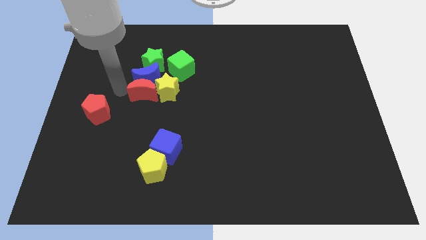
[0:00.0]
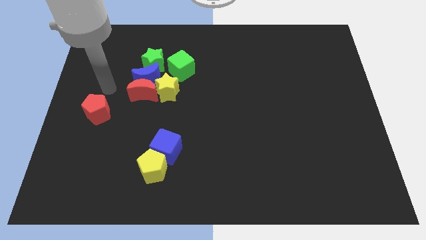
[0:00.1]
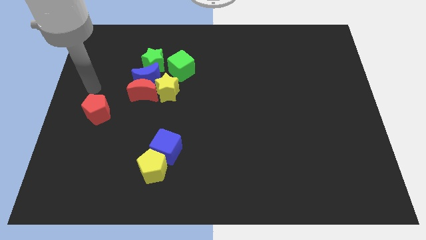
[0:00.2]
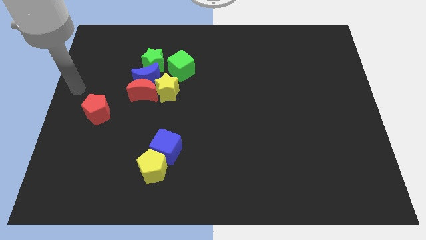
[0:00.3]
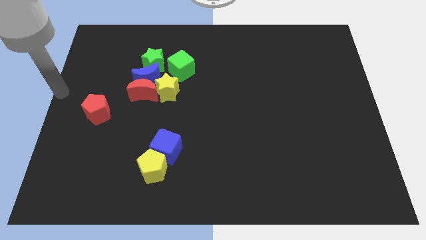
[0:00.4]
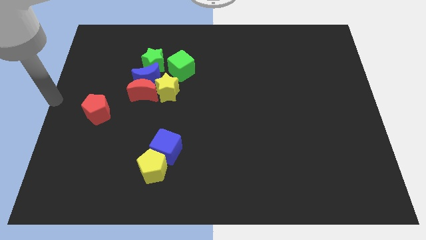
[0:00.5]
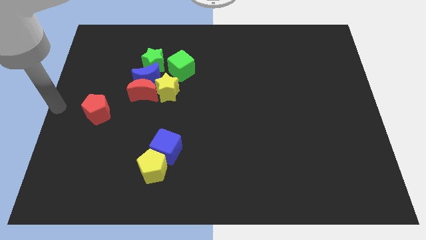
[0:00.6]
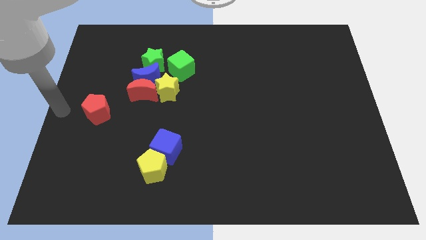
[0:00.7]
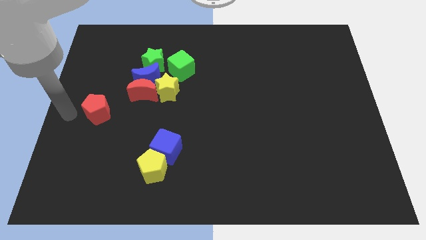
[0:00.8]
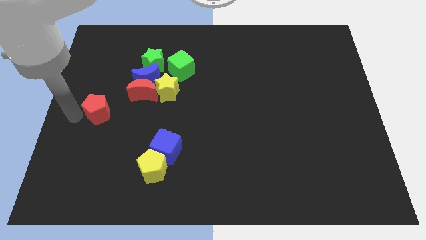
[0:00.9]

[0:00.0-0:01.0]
move the arm away from the red moon

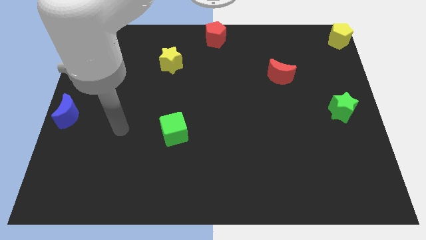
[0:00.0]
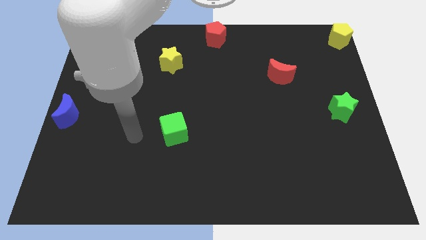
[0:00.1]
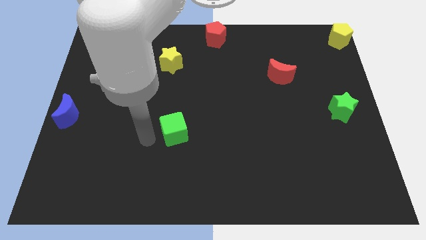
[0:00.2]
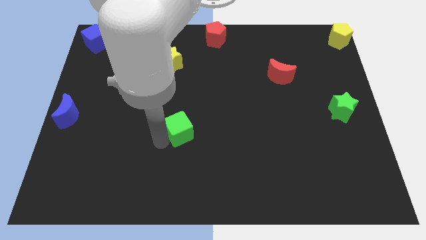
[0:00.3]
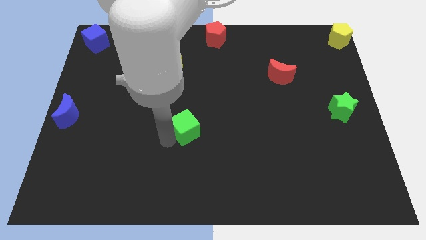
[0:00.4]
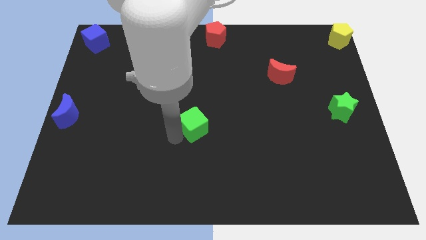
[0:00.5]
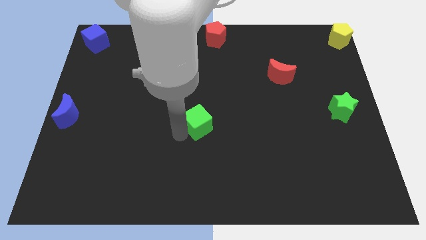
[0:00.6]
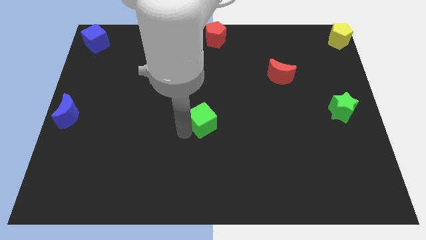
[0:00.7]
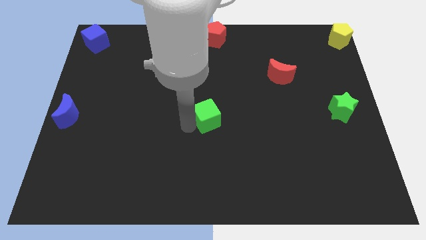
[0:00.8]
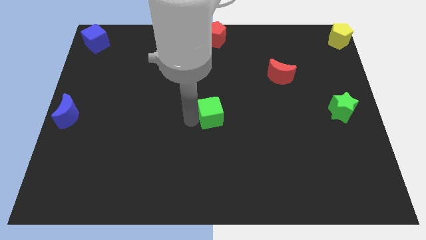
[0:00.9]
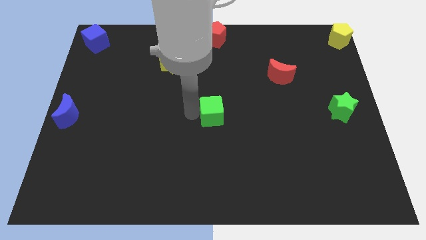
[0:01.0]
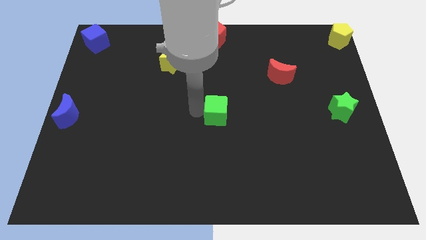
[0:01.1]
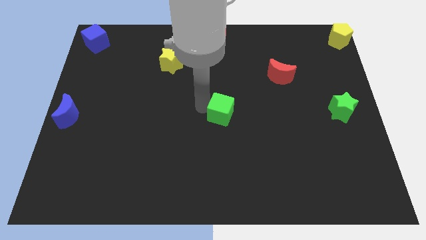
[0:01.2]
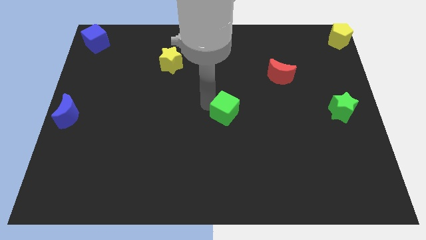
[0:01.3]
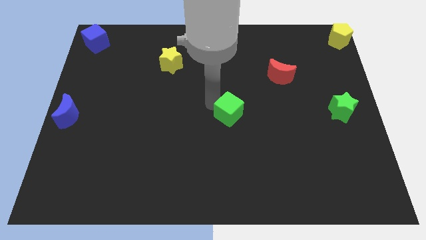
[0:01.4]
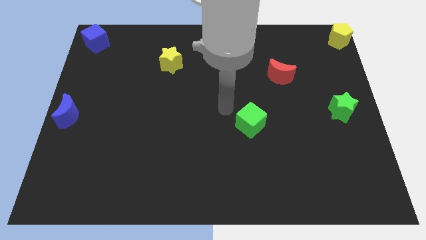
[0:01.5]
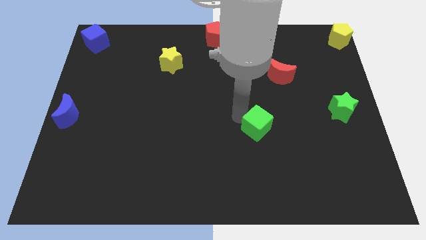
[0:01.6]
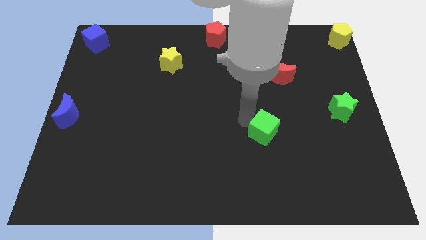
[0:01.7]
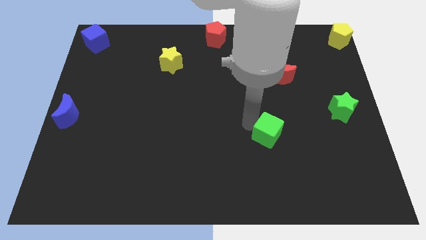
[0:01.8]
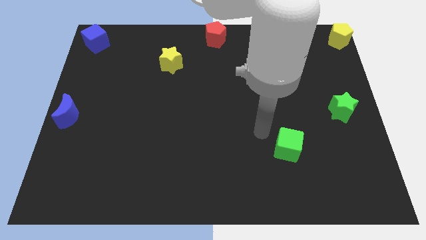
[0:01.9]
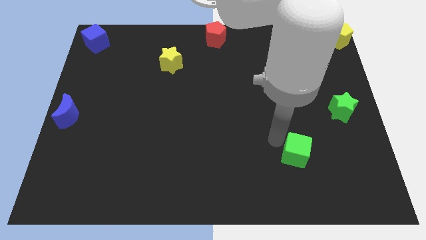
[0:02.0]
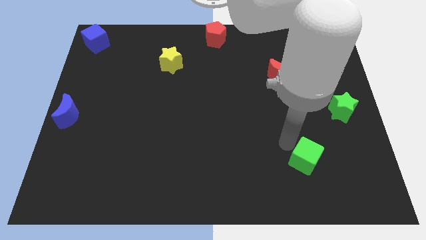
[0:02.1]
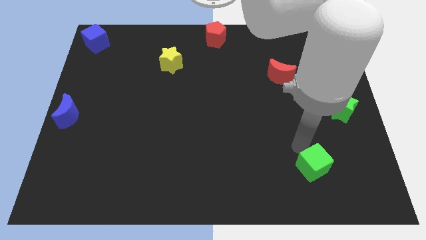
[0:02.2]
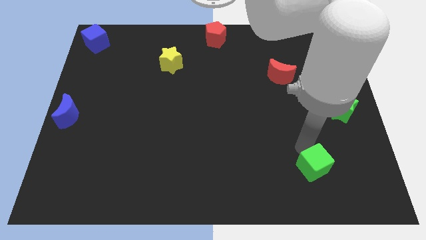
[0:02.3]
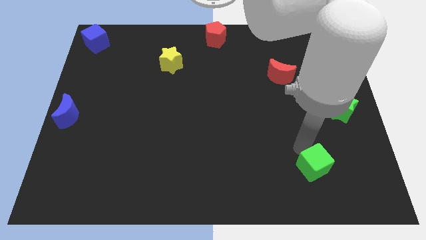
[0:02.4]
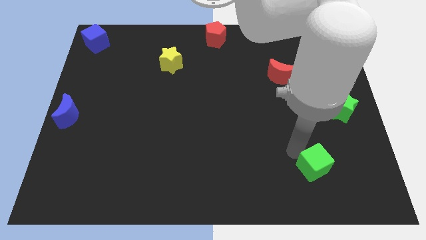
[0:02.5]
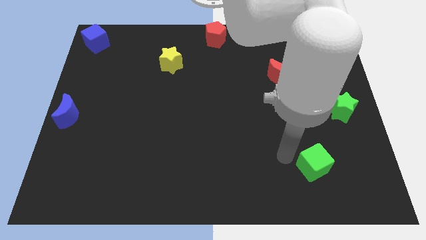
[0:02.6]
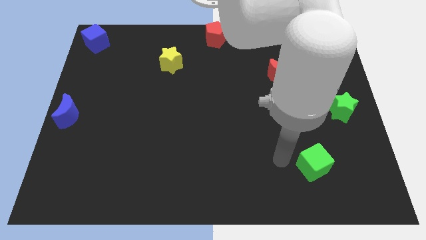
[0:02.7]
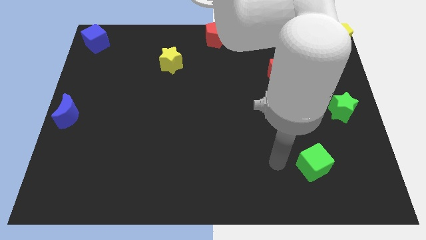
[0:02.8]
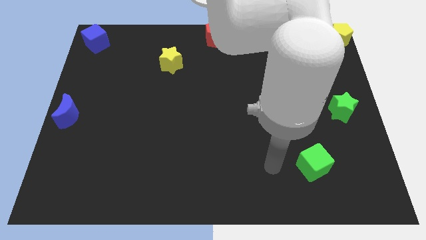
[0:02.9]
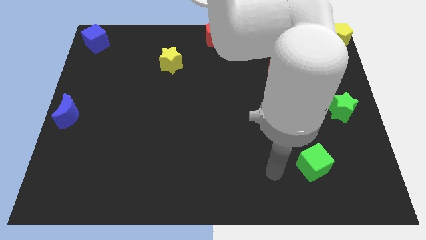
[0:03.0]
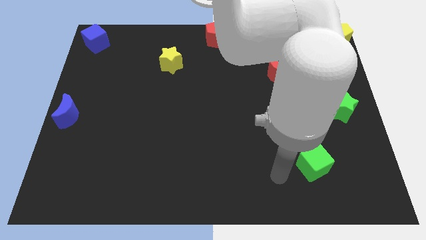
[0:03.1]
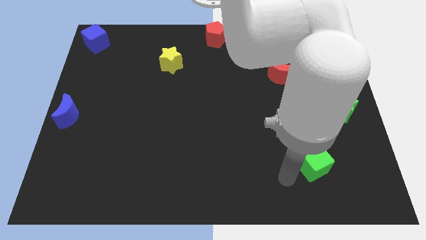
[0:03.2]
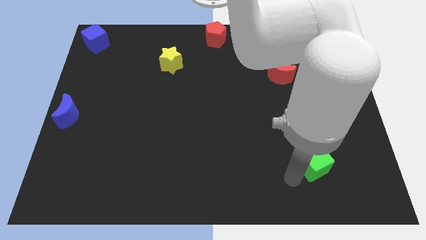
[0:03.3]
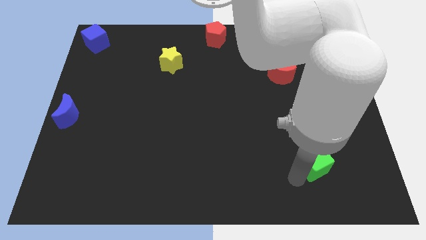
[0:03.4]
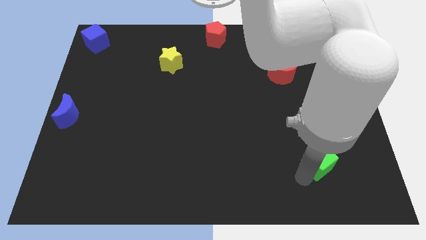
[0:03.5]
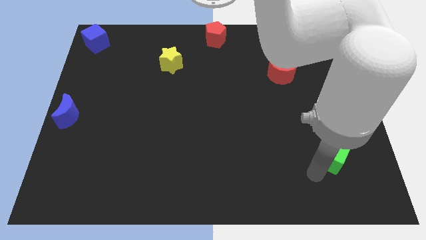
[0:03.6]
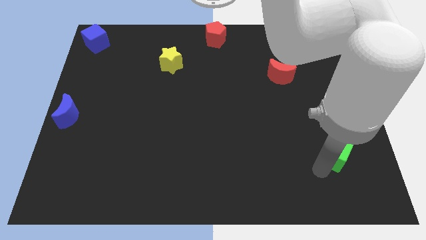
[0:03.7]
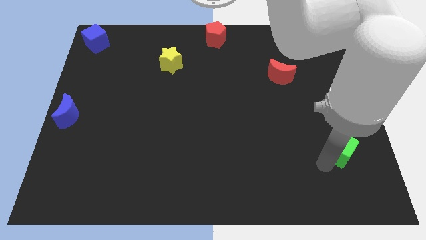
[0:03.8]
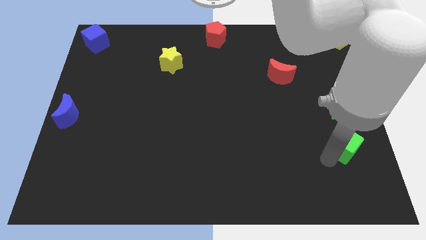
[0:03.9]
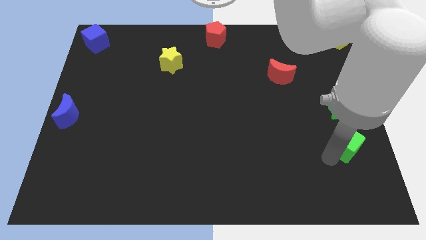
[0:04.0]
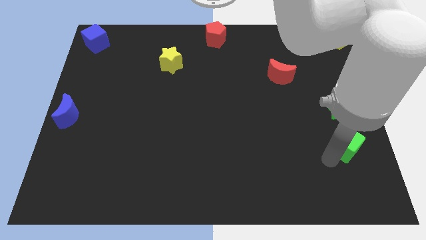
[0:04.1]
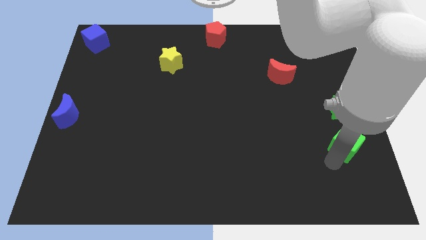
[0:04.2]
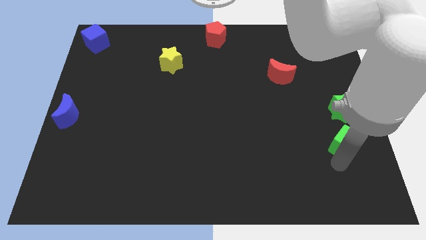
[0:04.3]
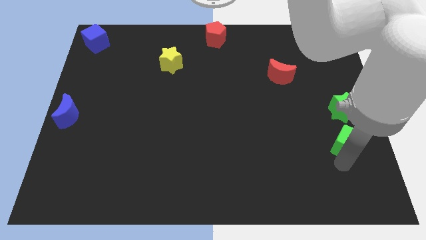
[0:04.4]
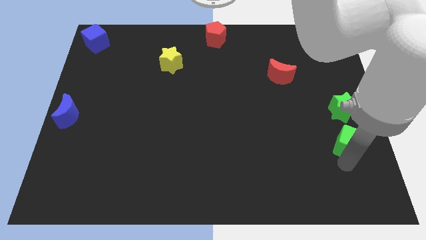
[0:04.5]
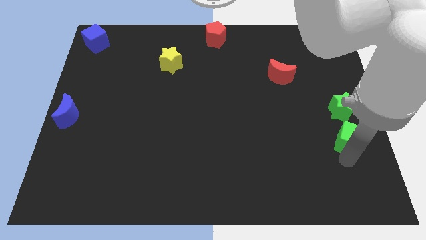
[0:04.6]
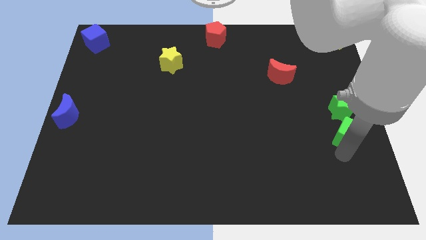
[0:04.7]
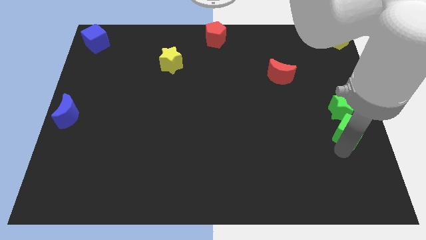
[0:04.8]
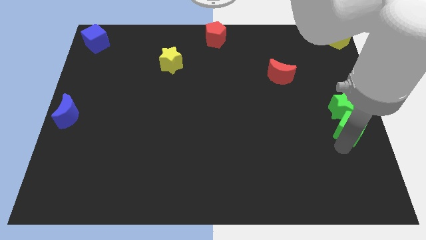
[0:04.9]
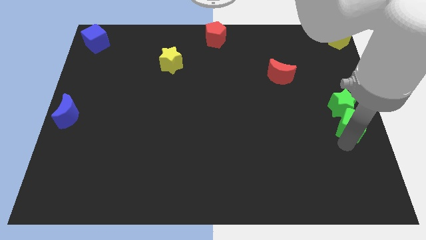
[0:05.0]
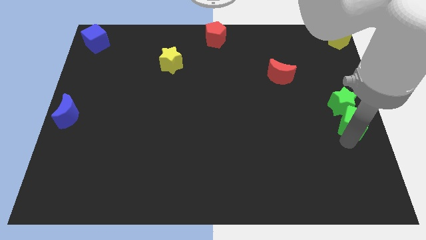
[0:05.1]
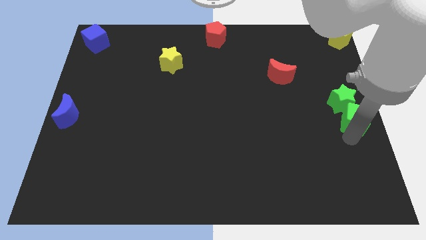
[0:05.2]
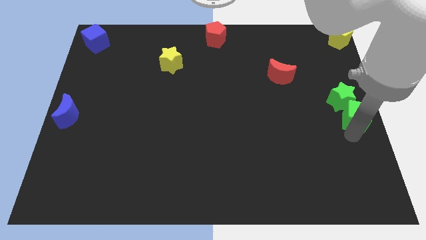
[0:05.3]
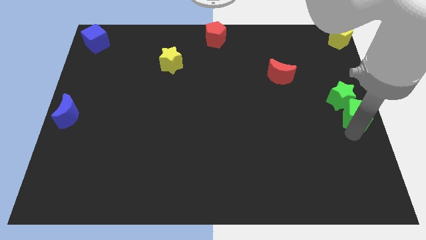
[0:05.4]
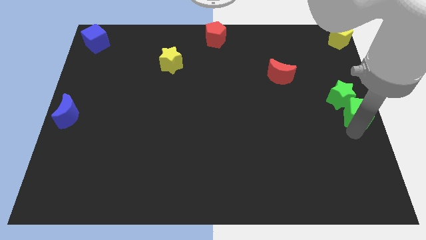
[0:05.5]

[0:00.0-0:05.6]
move green cube into green star

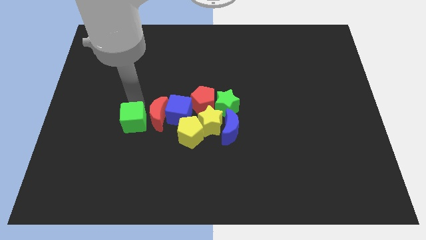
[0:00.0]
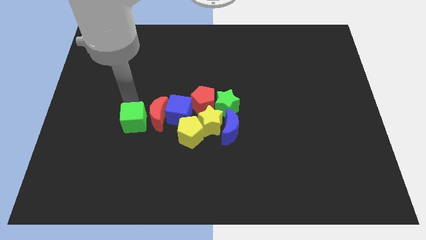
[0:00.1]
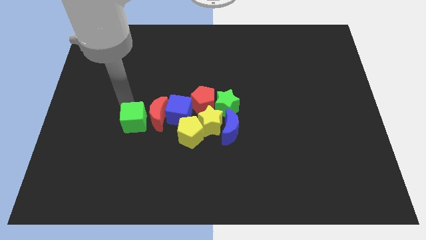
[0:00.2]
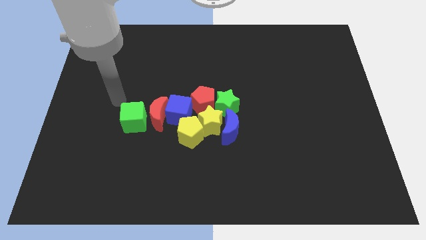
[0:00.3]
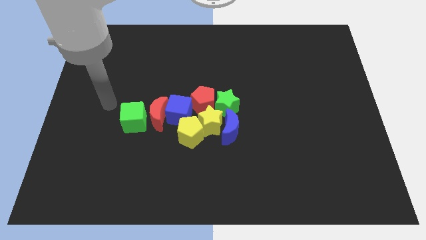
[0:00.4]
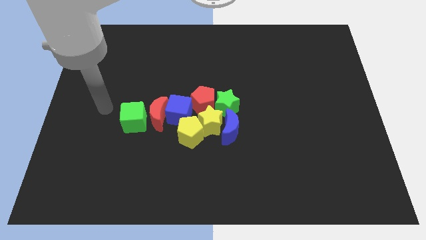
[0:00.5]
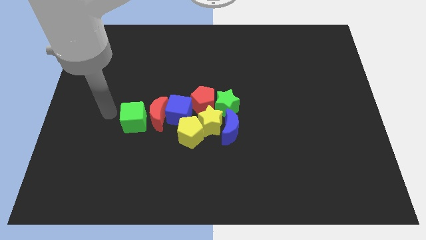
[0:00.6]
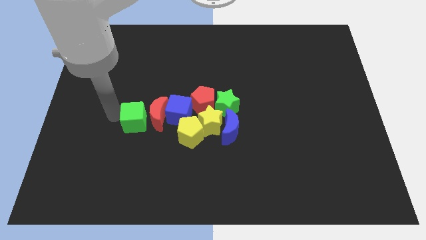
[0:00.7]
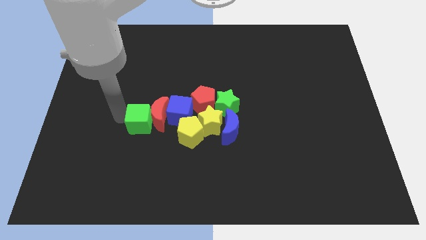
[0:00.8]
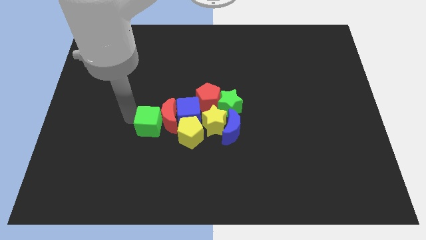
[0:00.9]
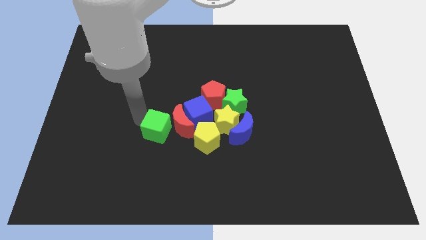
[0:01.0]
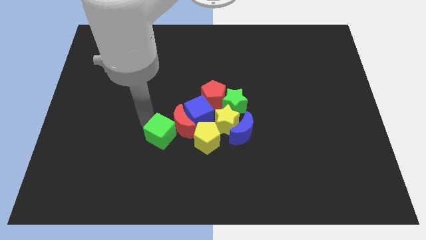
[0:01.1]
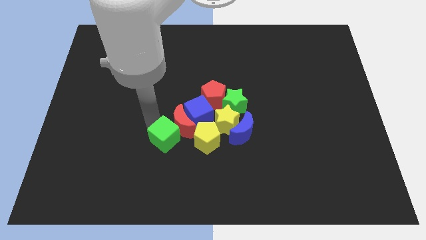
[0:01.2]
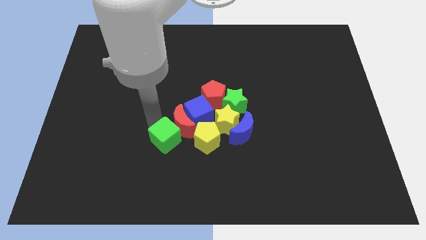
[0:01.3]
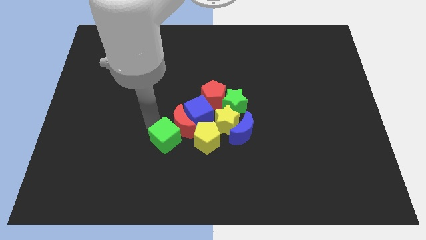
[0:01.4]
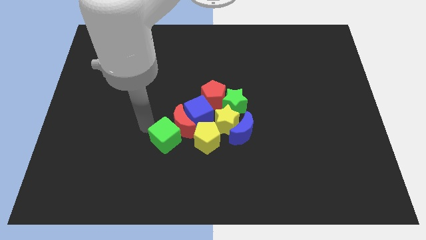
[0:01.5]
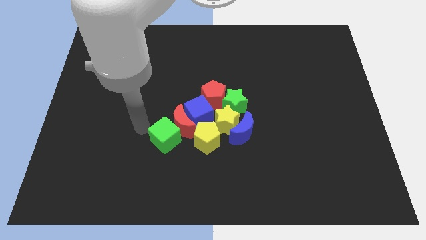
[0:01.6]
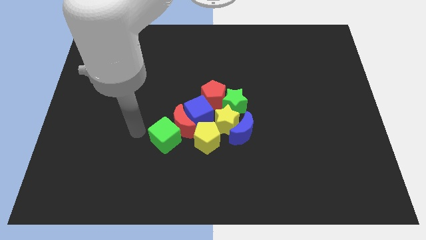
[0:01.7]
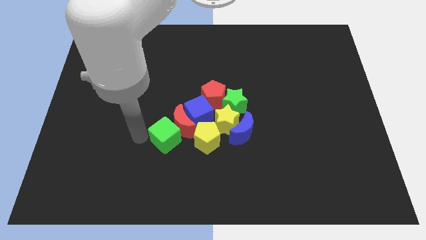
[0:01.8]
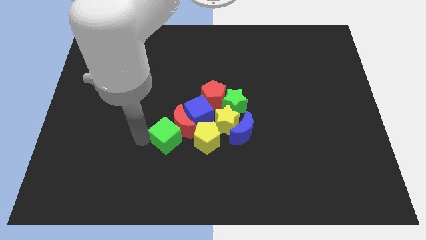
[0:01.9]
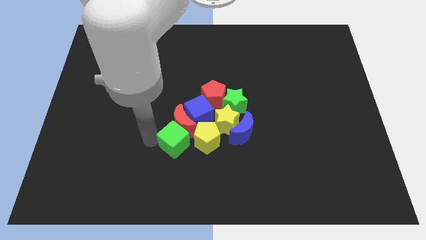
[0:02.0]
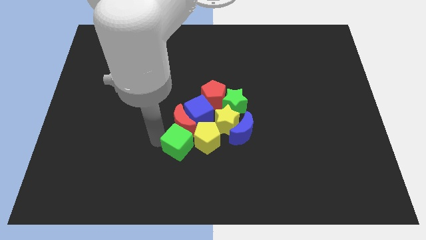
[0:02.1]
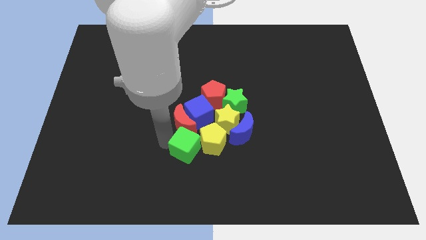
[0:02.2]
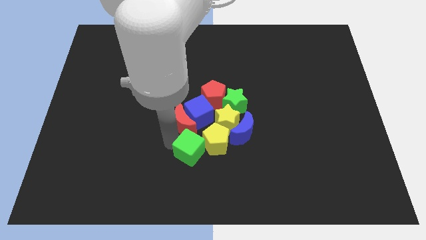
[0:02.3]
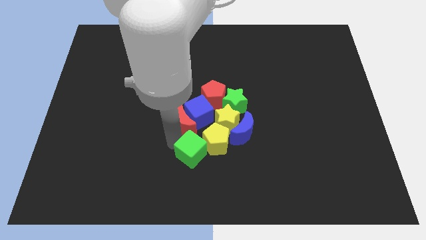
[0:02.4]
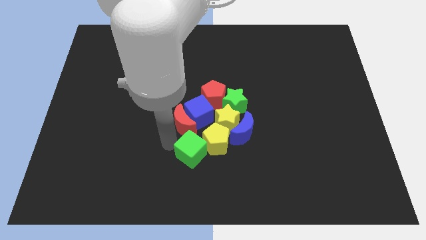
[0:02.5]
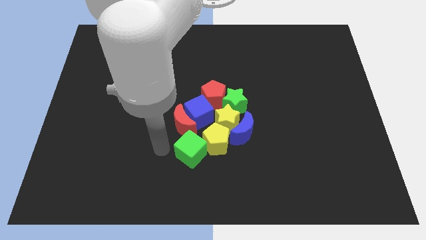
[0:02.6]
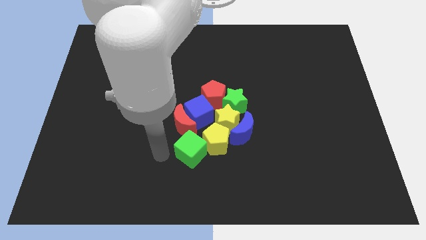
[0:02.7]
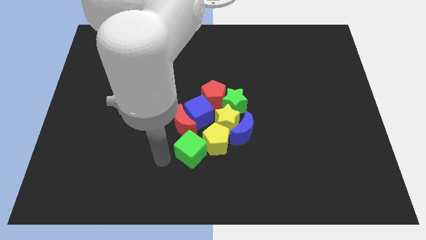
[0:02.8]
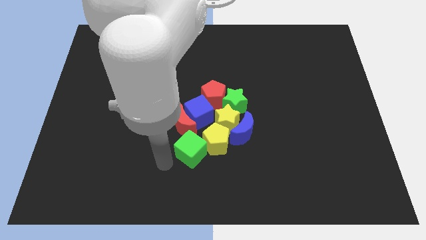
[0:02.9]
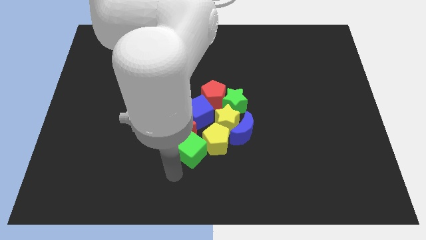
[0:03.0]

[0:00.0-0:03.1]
move the green cube to the bottom of the red crescent
